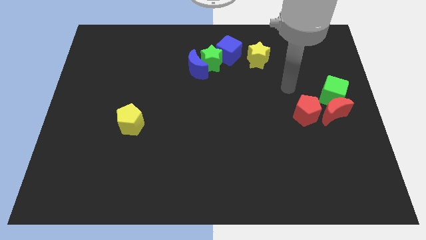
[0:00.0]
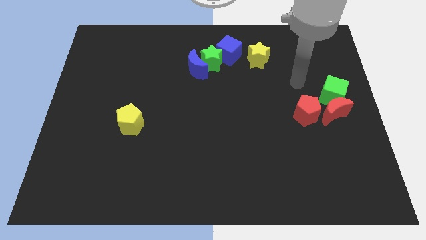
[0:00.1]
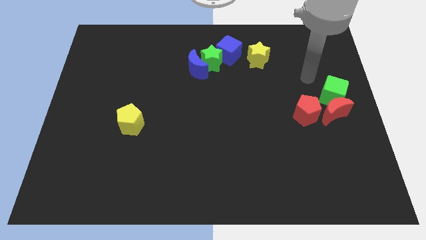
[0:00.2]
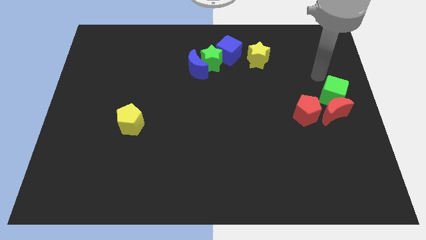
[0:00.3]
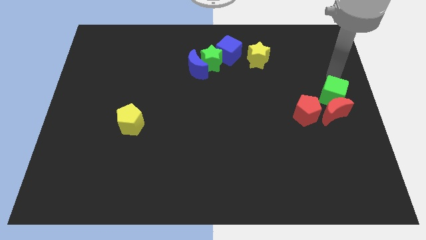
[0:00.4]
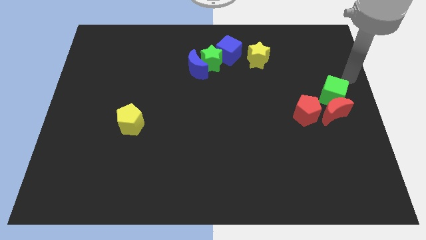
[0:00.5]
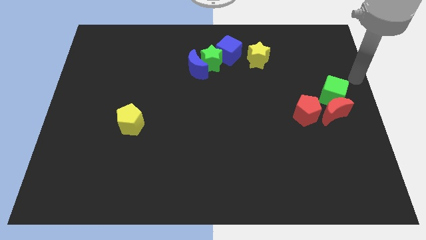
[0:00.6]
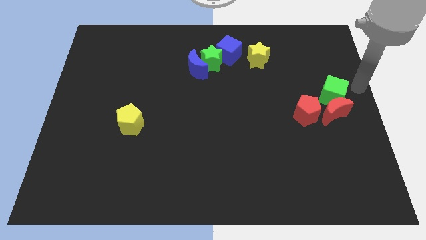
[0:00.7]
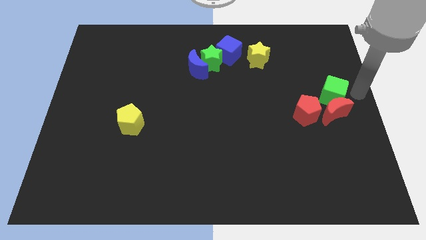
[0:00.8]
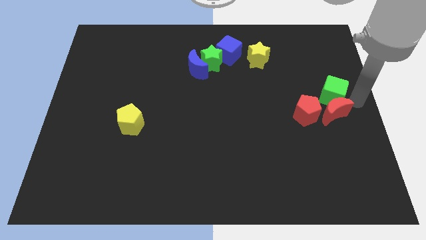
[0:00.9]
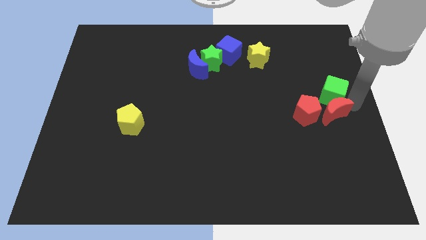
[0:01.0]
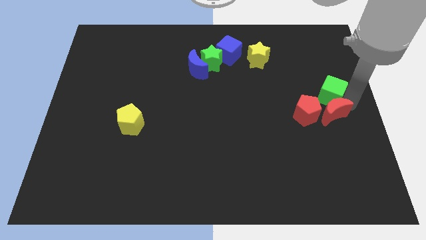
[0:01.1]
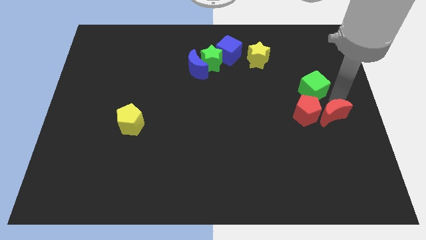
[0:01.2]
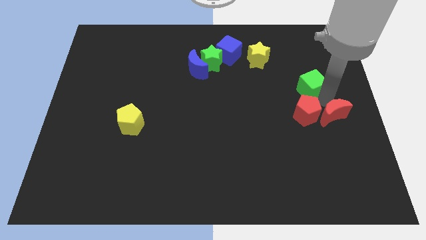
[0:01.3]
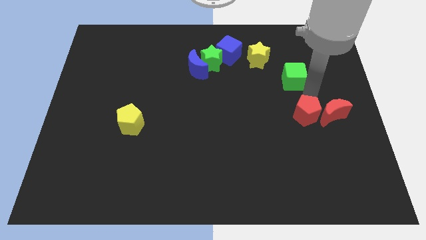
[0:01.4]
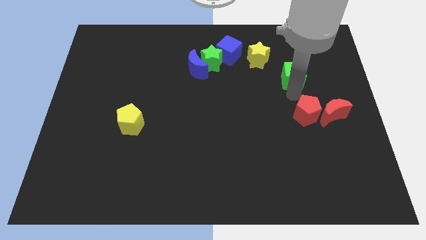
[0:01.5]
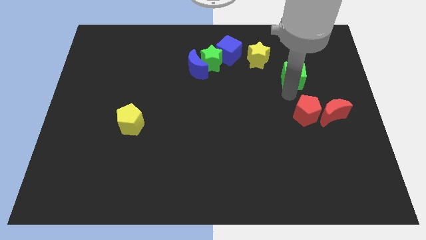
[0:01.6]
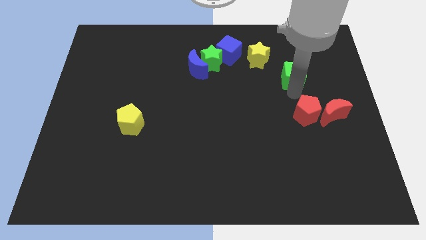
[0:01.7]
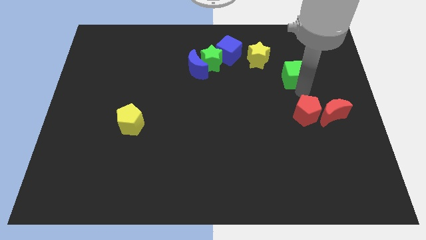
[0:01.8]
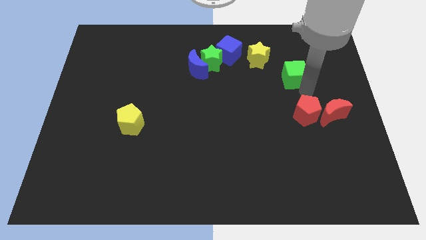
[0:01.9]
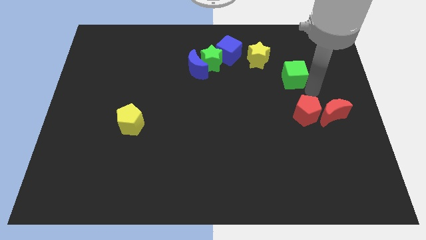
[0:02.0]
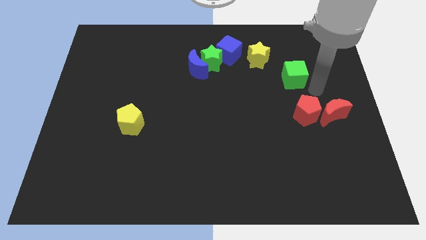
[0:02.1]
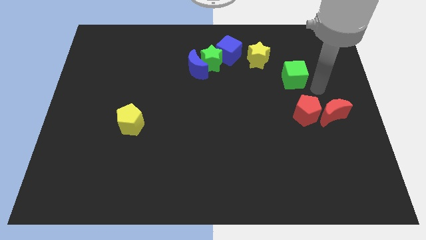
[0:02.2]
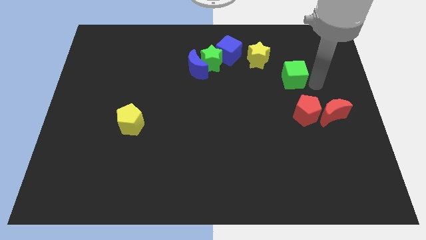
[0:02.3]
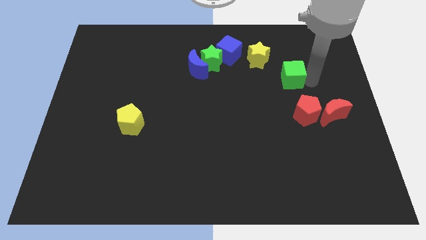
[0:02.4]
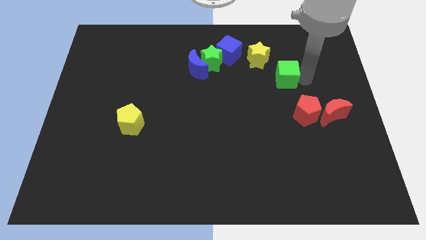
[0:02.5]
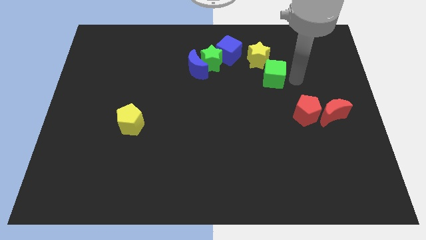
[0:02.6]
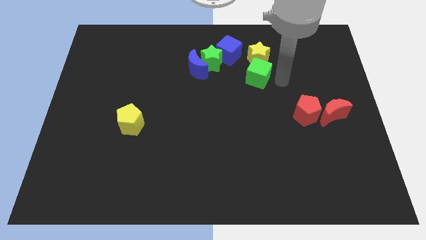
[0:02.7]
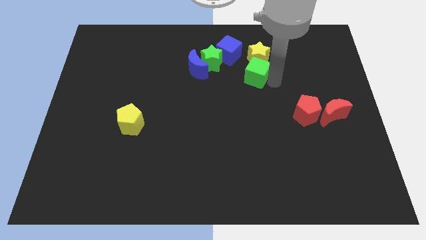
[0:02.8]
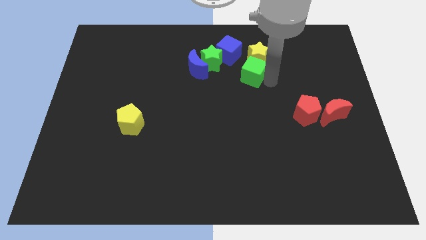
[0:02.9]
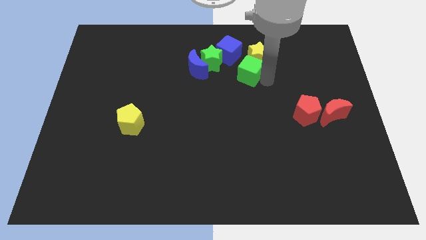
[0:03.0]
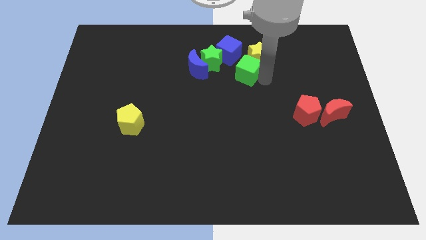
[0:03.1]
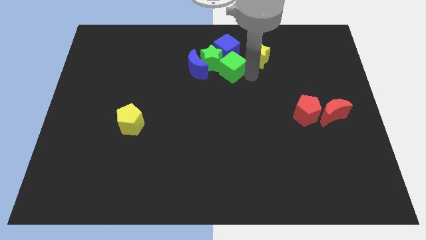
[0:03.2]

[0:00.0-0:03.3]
push green cube away from red crescent

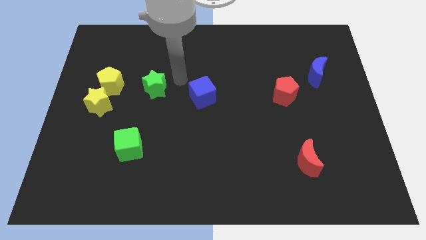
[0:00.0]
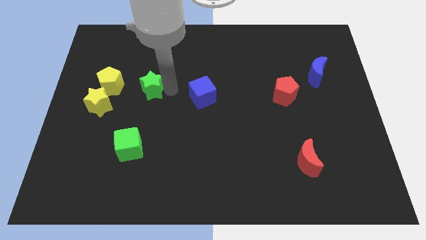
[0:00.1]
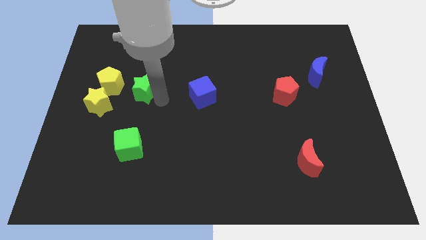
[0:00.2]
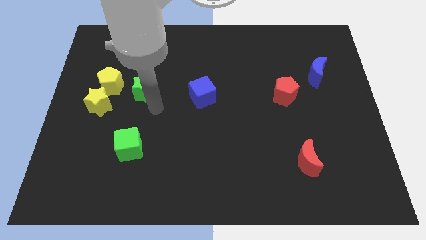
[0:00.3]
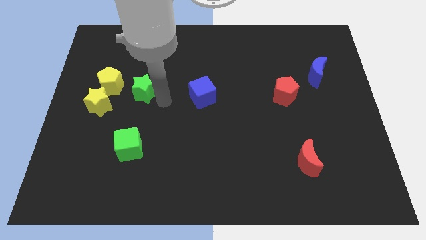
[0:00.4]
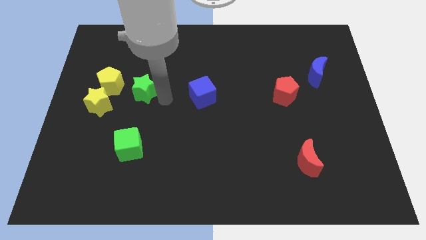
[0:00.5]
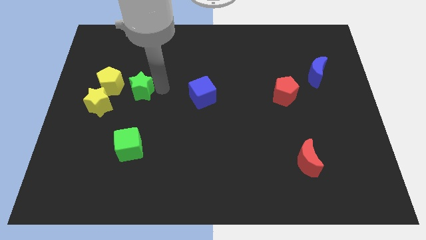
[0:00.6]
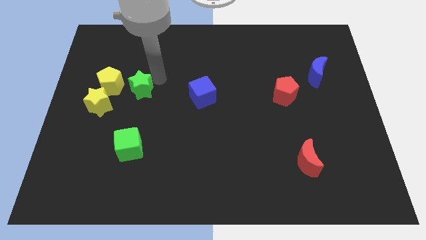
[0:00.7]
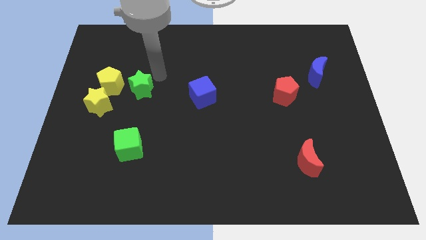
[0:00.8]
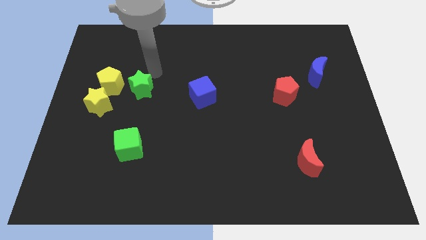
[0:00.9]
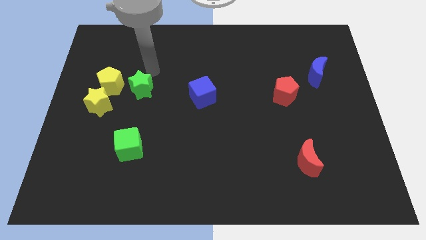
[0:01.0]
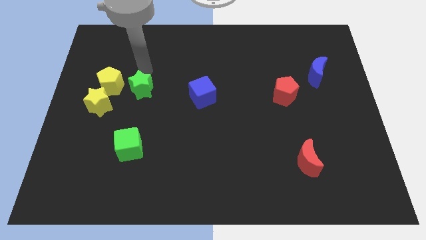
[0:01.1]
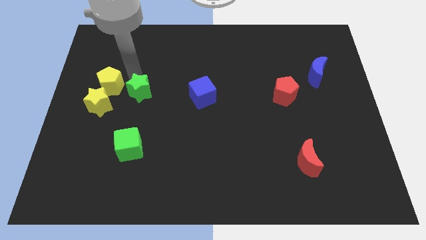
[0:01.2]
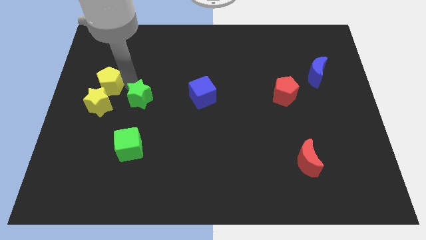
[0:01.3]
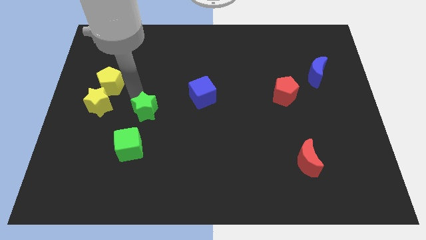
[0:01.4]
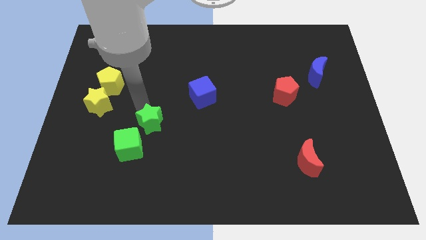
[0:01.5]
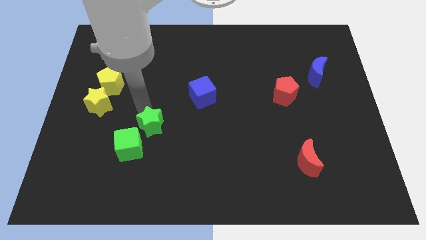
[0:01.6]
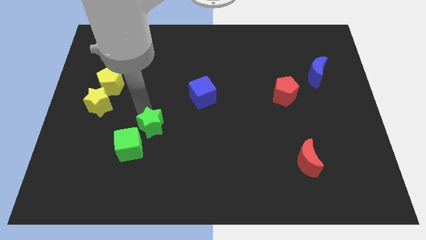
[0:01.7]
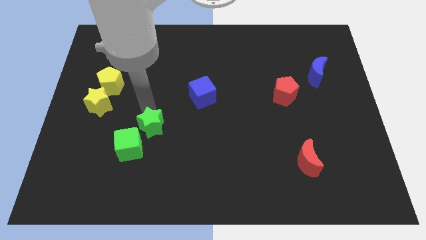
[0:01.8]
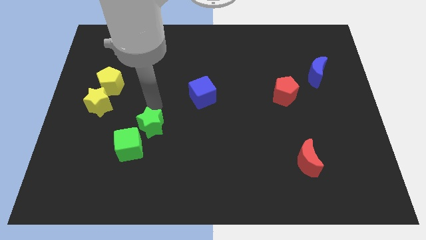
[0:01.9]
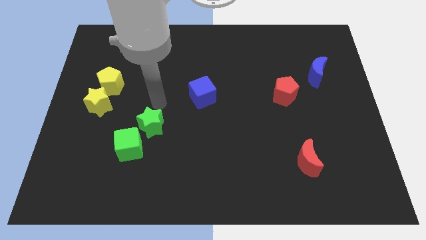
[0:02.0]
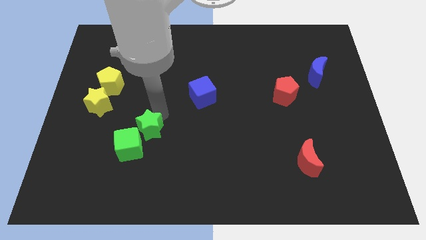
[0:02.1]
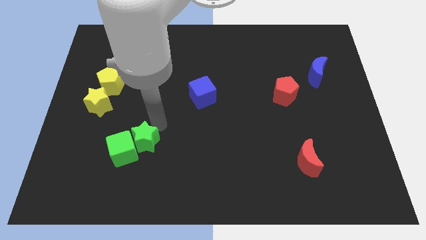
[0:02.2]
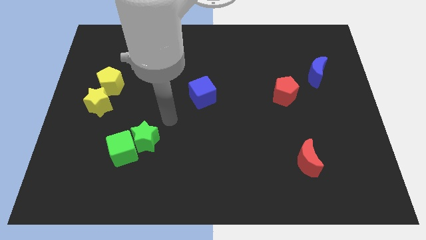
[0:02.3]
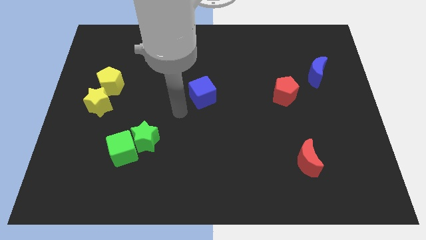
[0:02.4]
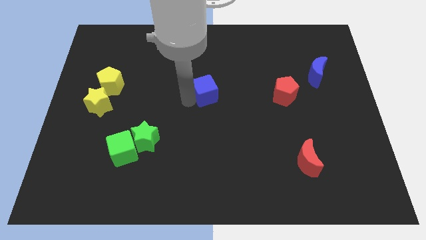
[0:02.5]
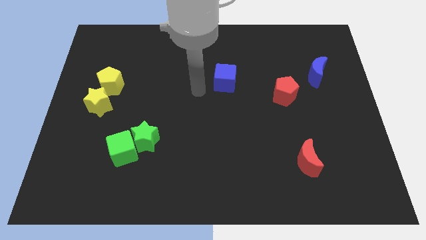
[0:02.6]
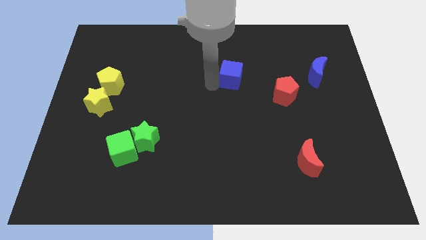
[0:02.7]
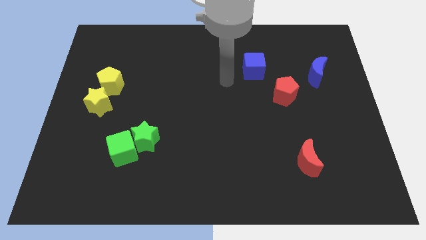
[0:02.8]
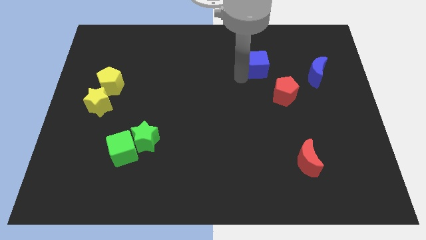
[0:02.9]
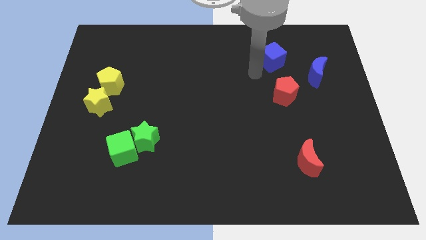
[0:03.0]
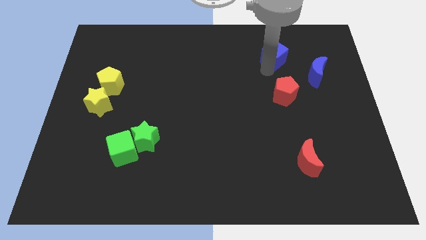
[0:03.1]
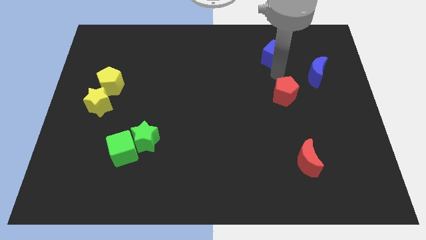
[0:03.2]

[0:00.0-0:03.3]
move the blue cube above red pentagon

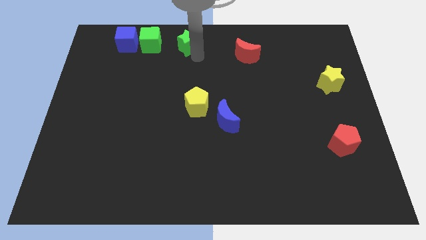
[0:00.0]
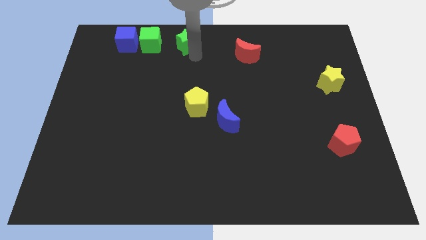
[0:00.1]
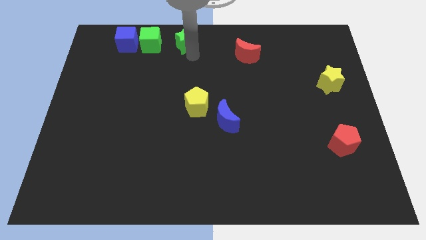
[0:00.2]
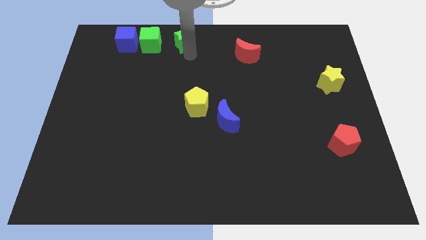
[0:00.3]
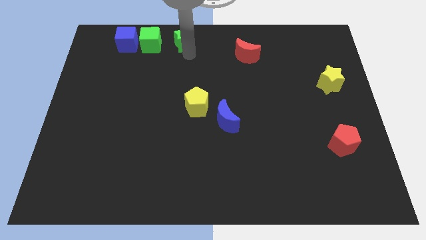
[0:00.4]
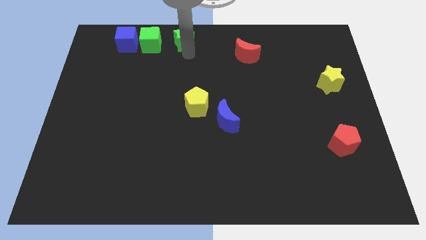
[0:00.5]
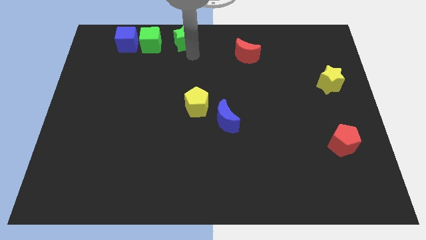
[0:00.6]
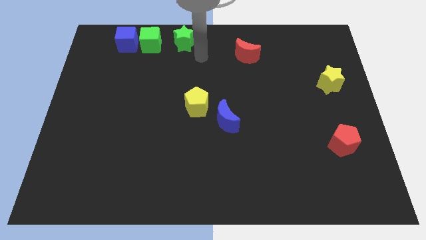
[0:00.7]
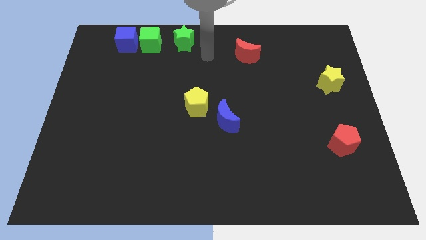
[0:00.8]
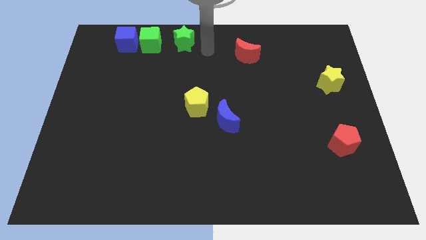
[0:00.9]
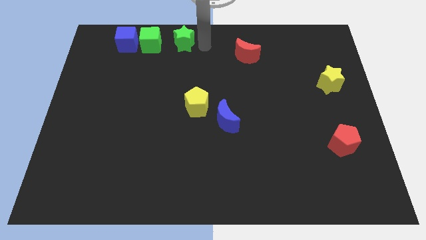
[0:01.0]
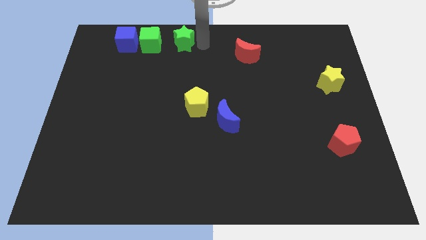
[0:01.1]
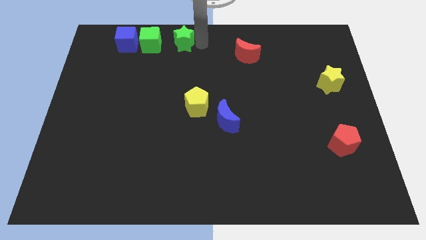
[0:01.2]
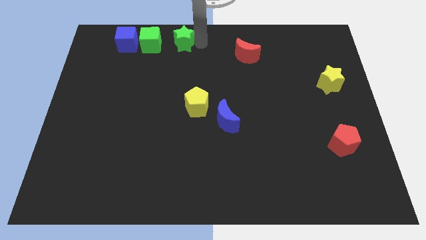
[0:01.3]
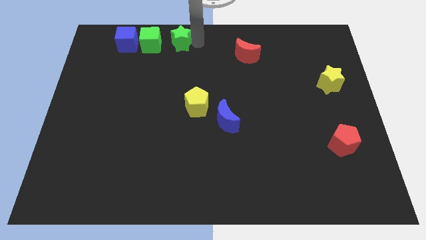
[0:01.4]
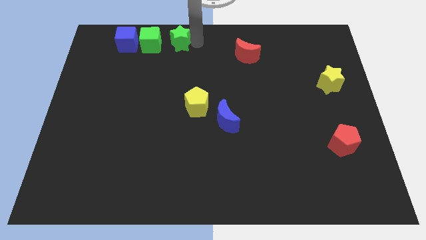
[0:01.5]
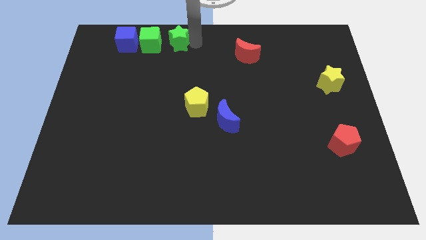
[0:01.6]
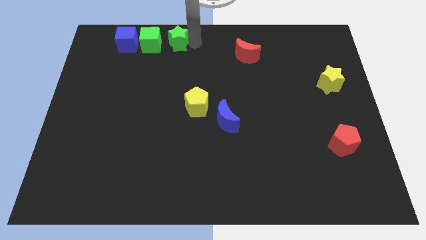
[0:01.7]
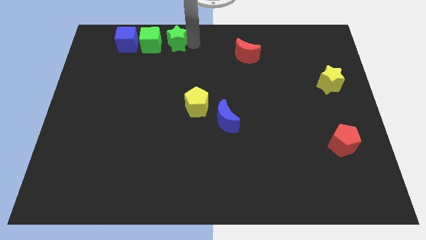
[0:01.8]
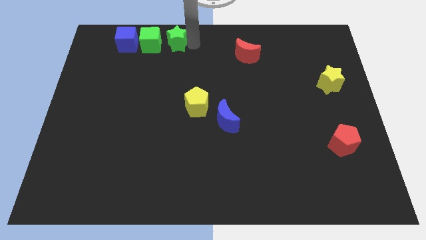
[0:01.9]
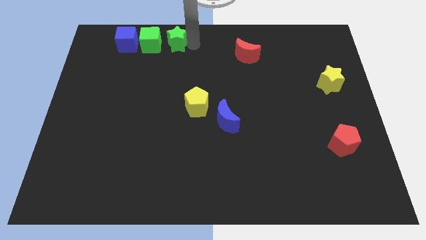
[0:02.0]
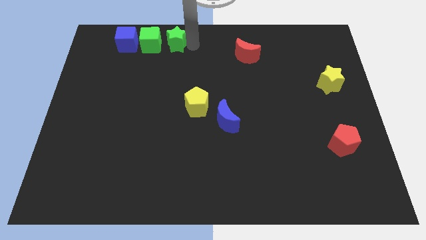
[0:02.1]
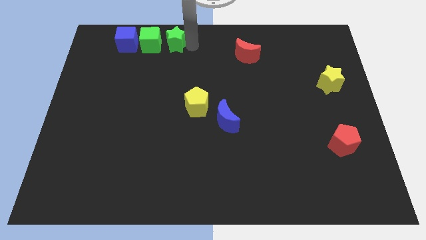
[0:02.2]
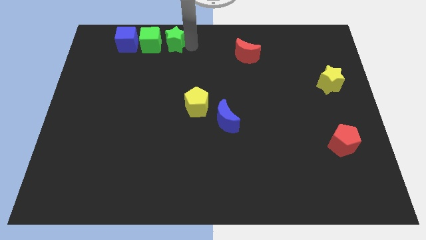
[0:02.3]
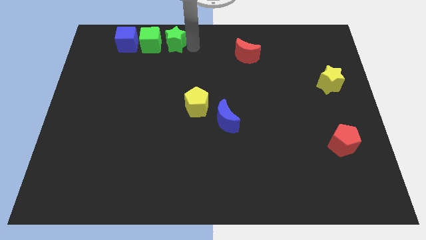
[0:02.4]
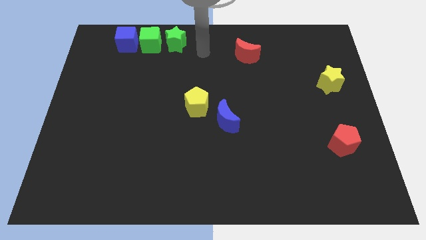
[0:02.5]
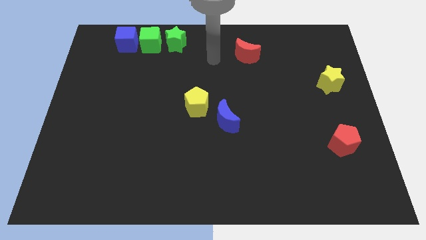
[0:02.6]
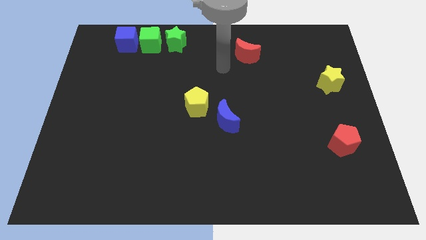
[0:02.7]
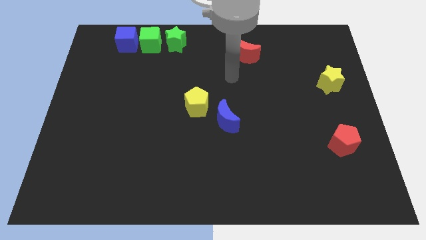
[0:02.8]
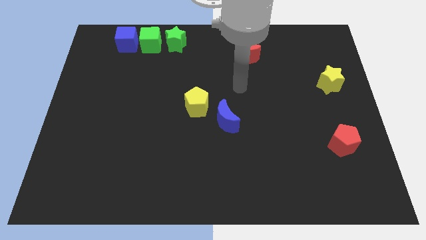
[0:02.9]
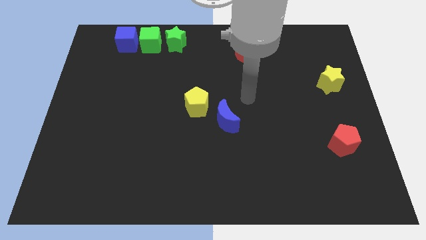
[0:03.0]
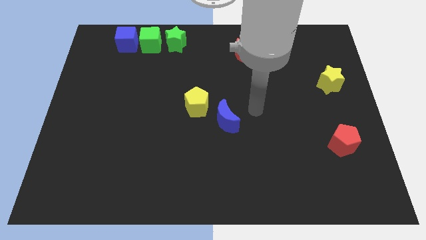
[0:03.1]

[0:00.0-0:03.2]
move the green star slightly towards the green cube
